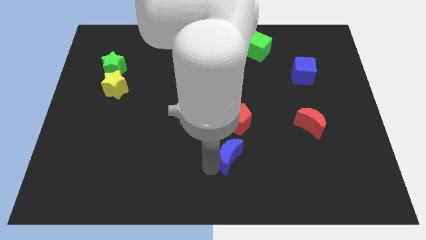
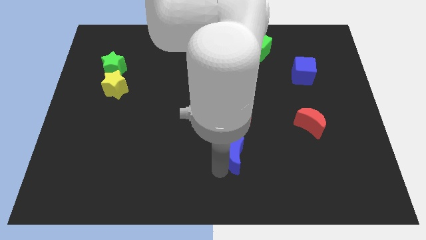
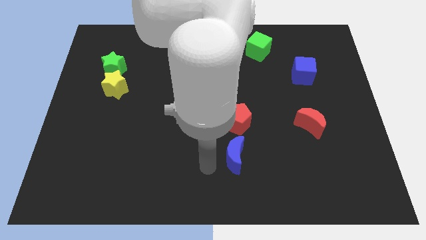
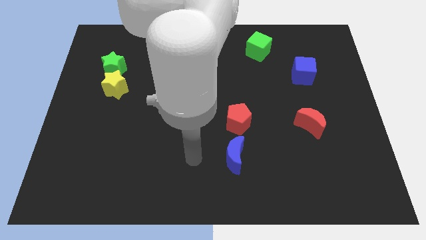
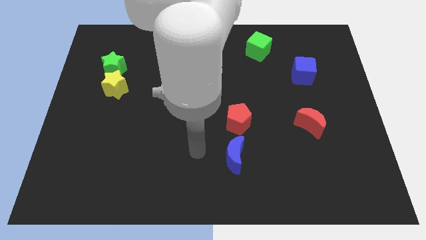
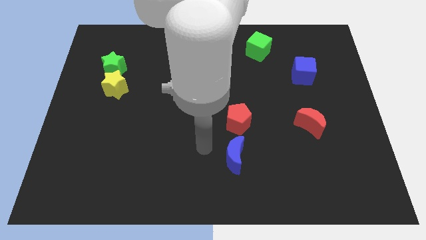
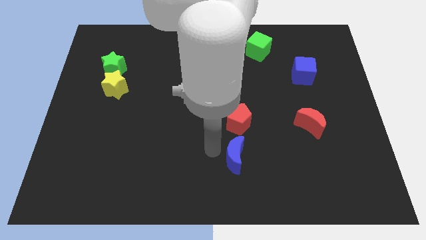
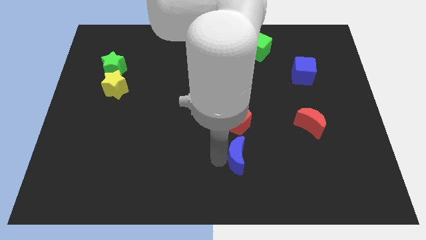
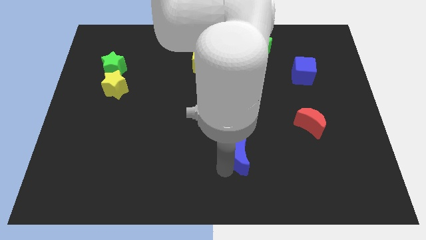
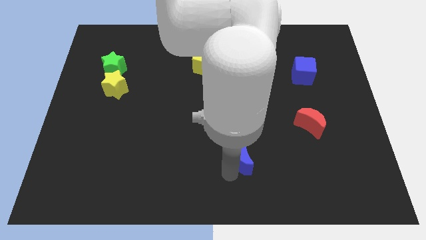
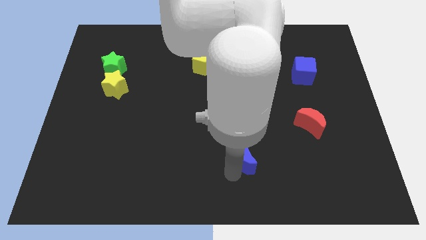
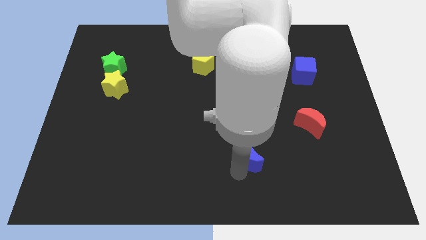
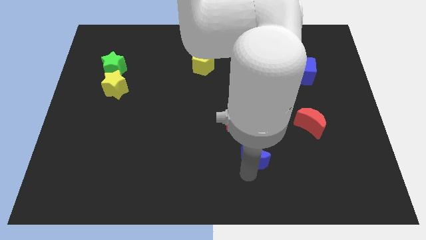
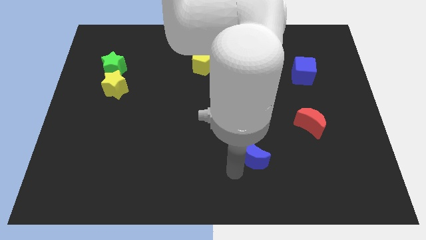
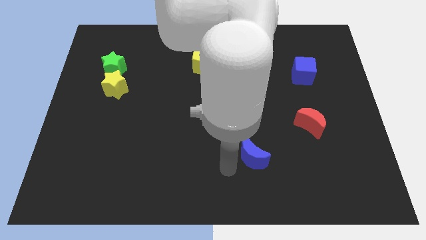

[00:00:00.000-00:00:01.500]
push the blue moon and place it below red pentagon

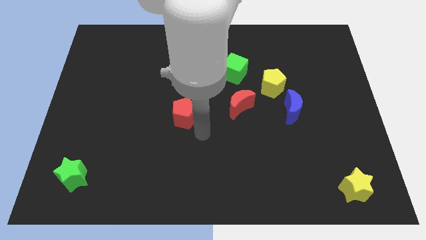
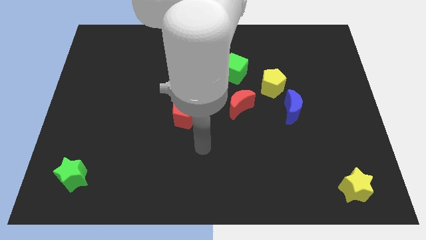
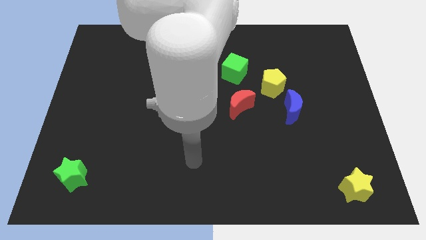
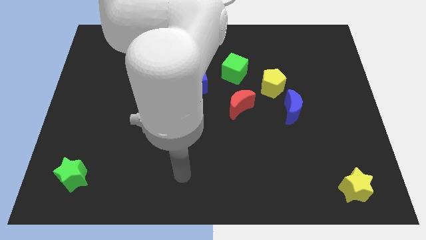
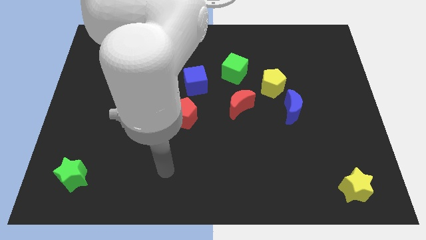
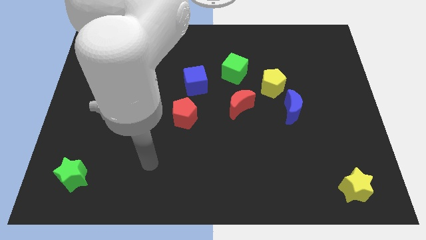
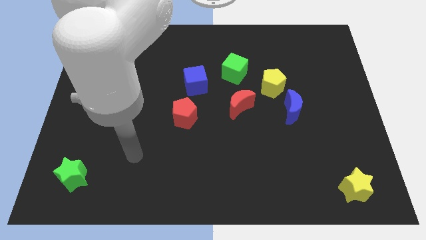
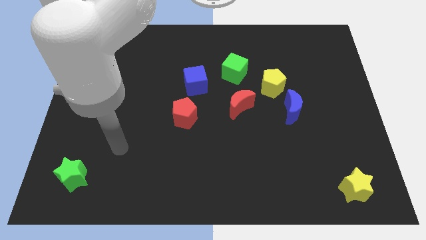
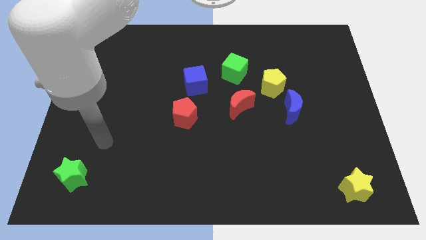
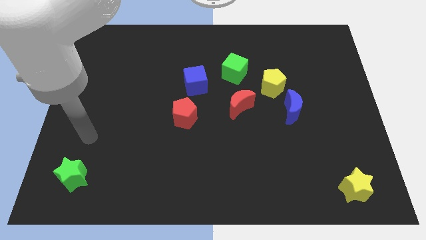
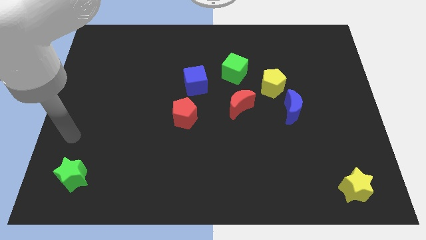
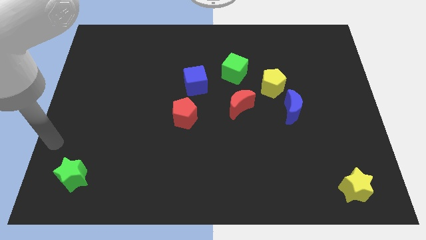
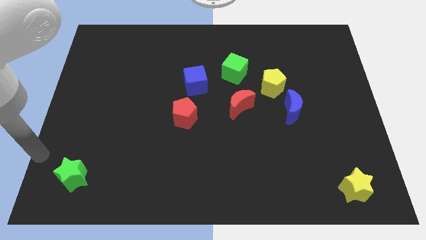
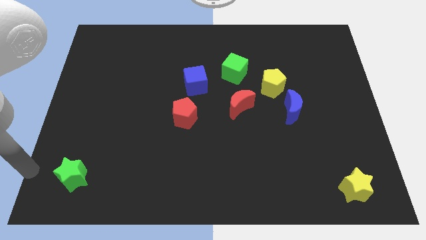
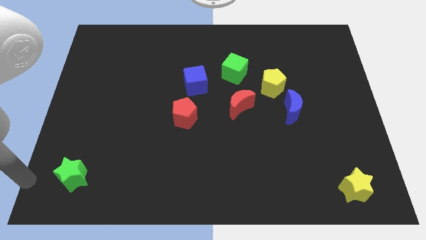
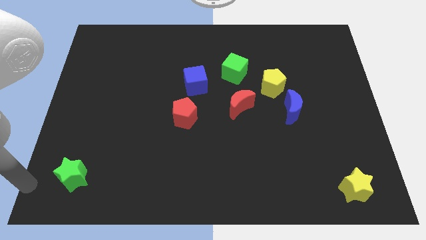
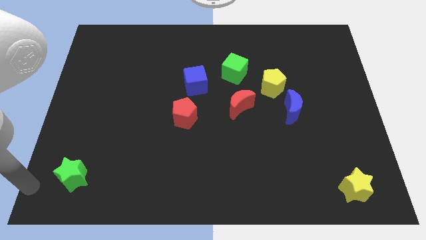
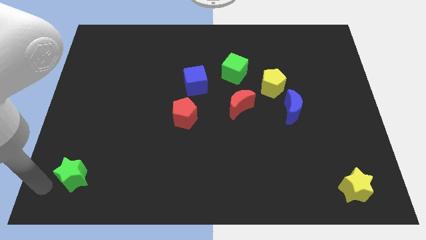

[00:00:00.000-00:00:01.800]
move your arm to the left of green star

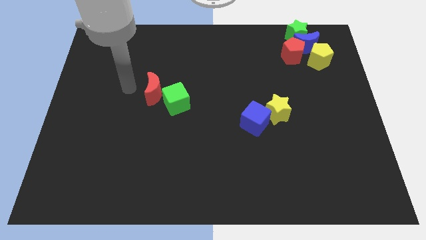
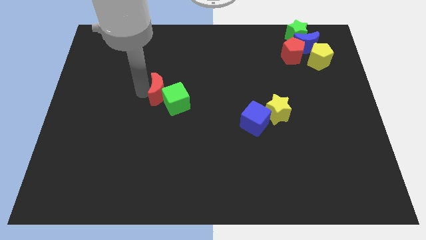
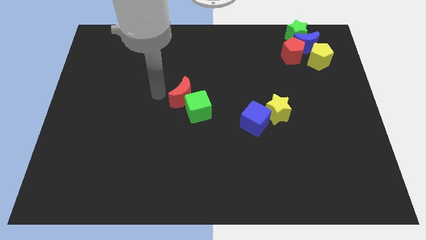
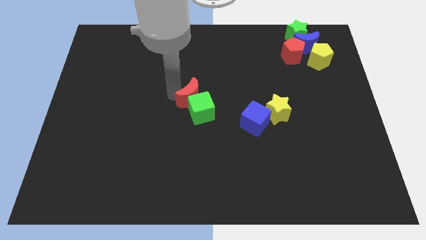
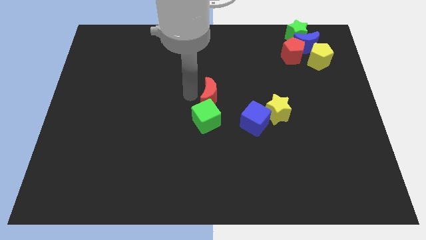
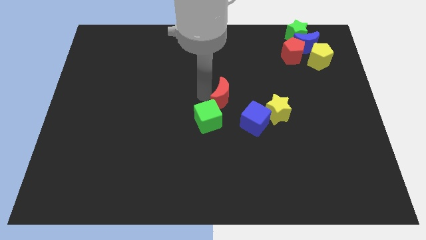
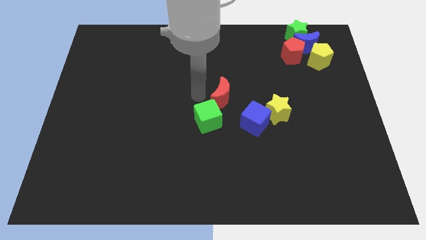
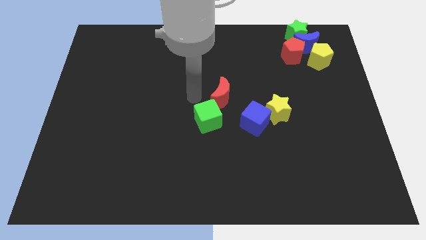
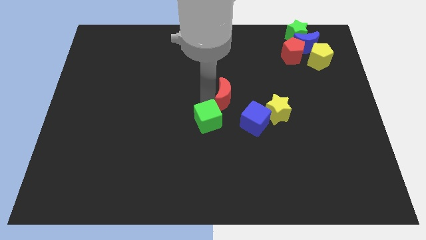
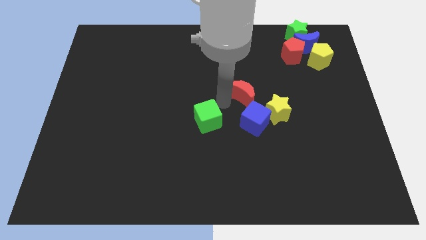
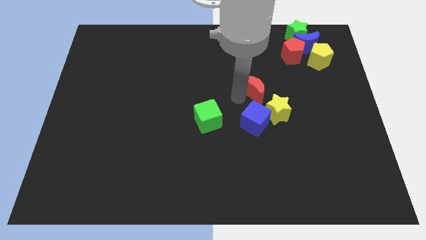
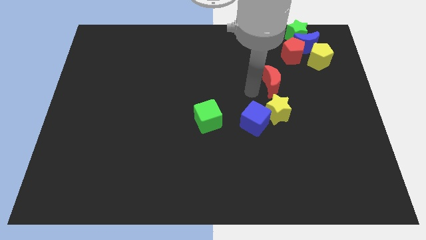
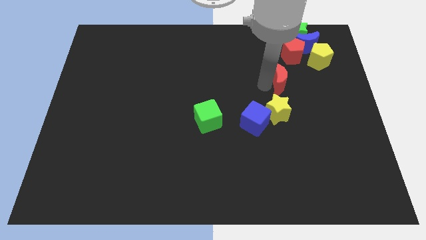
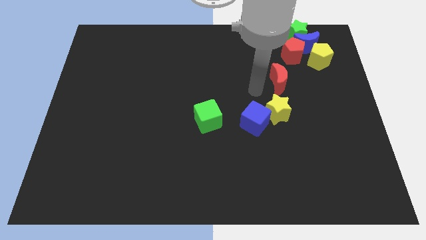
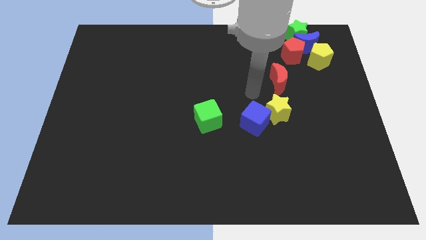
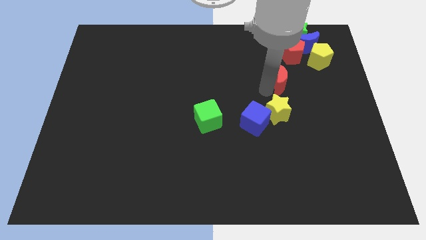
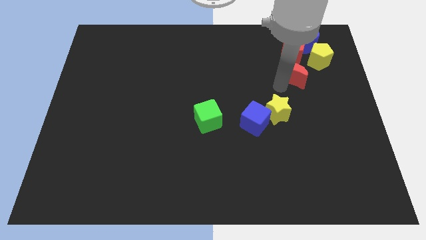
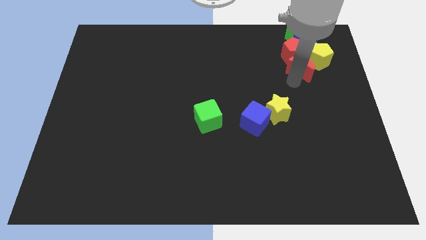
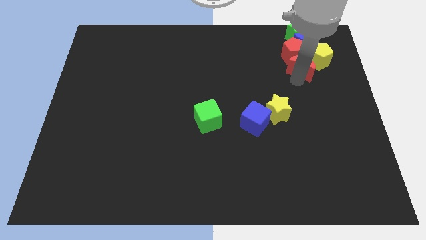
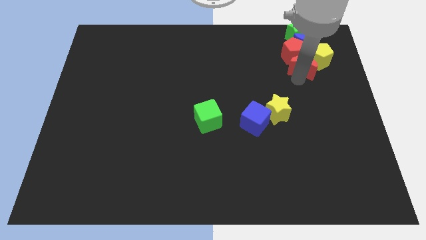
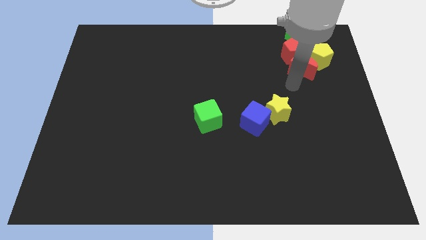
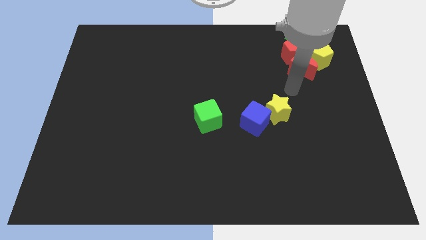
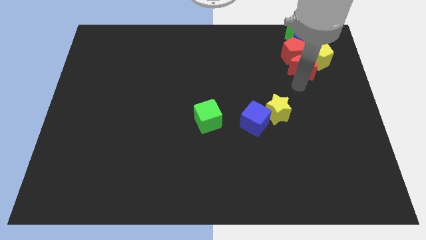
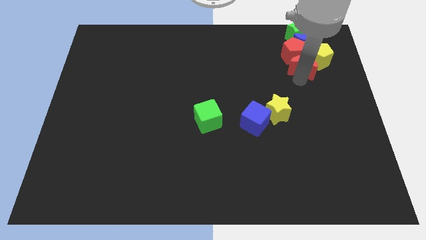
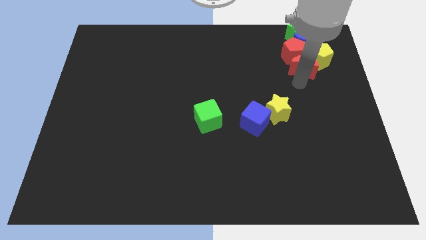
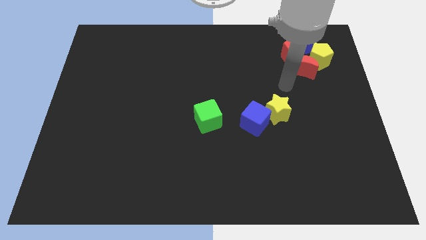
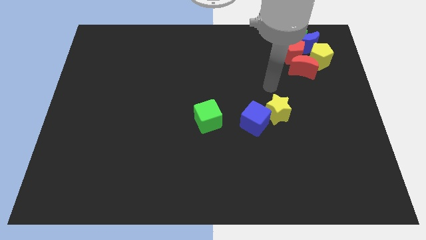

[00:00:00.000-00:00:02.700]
push the red crescent into the group of blocks

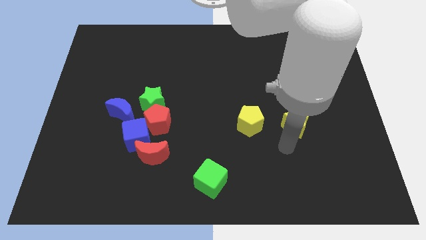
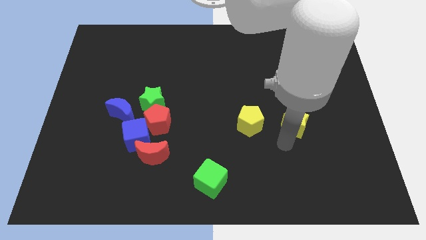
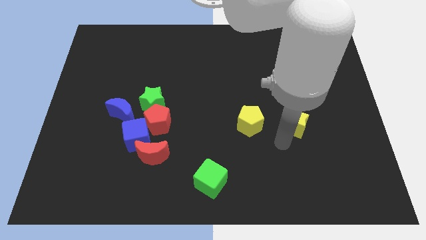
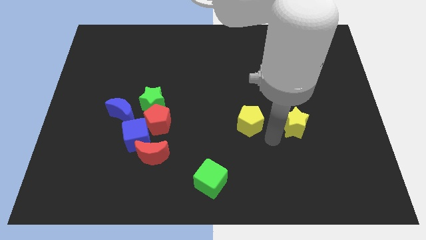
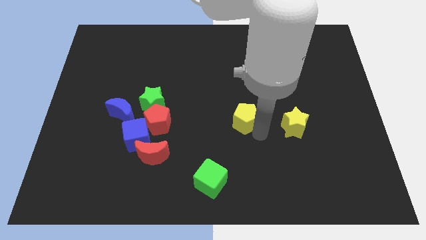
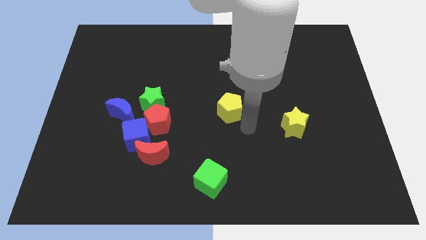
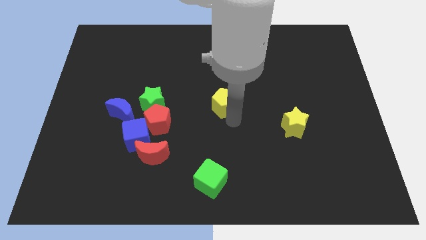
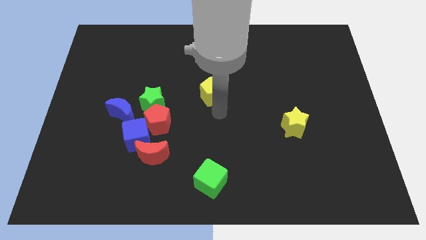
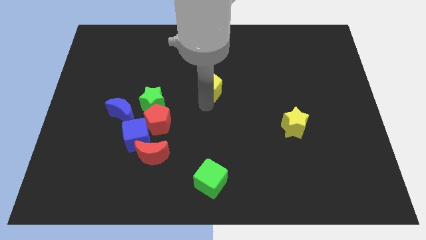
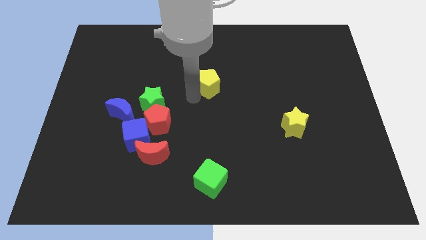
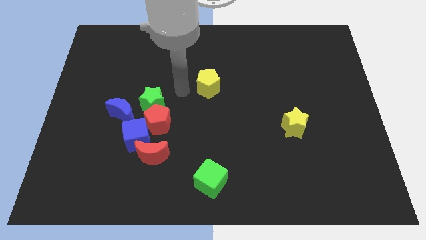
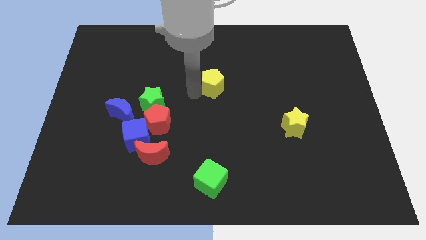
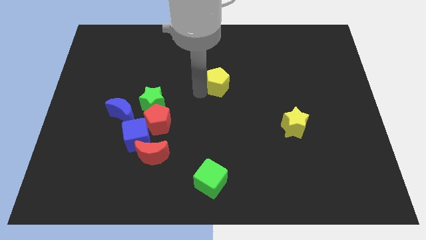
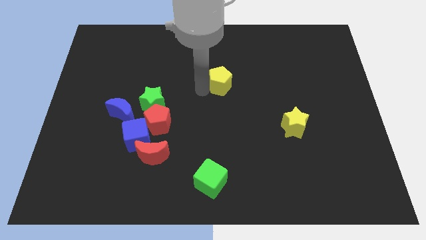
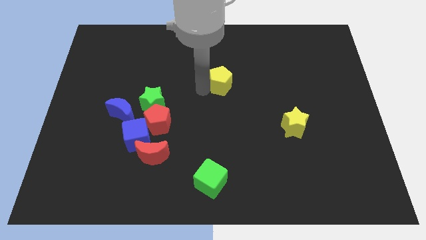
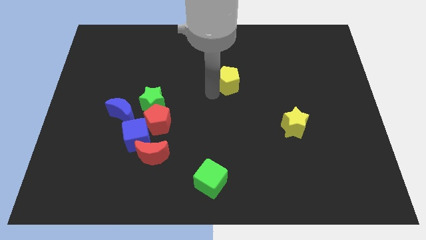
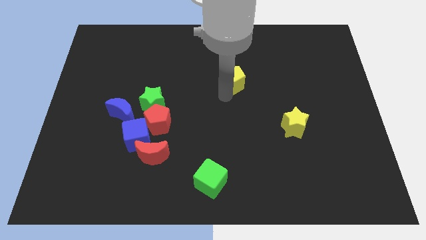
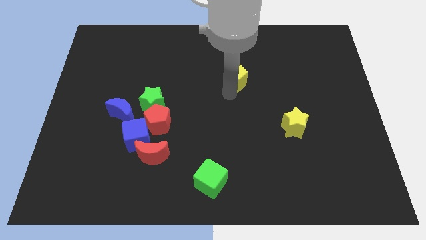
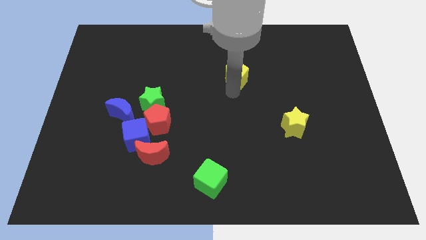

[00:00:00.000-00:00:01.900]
move the yellow pentagon to the center

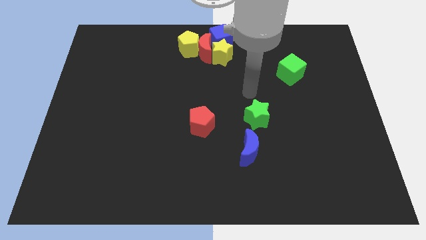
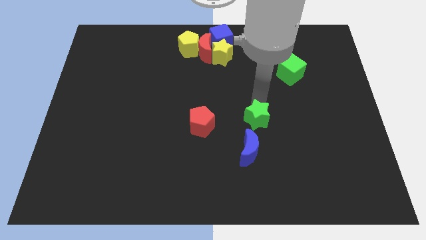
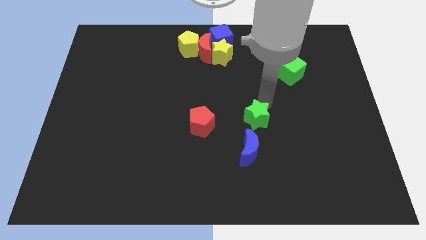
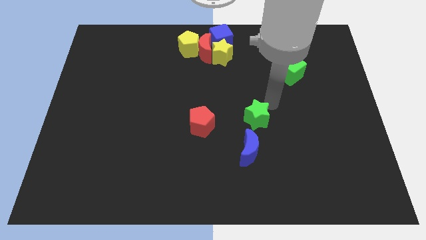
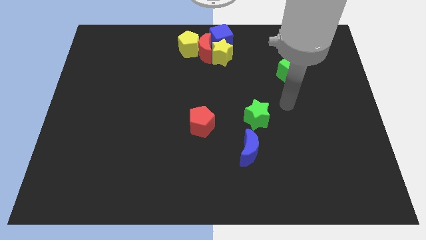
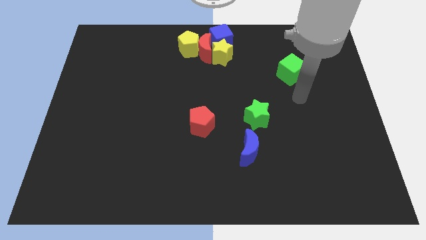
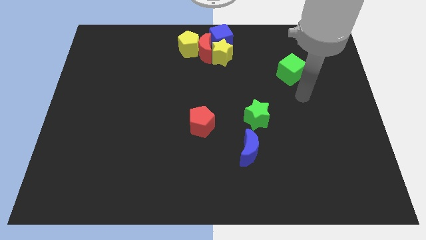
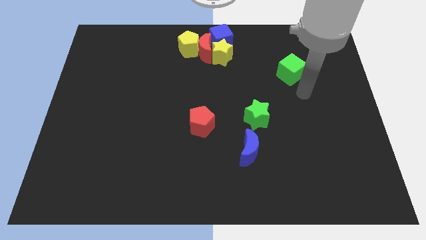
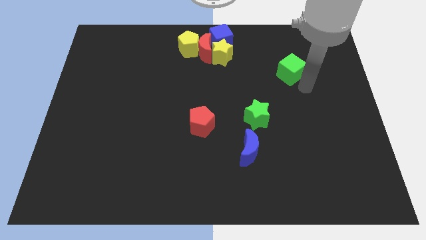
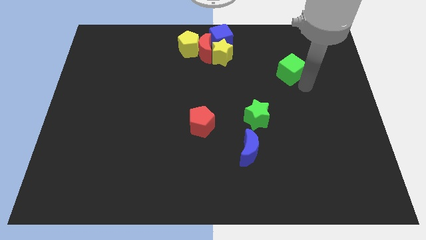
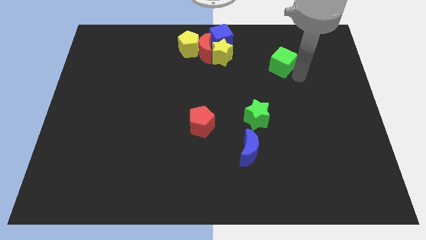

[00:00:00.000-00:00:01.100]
move your arm towards the green cube
